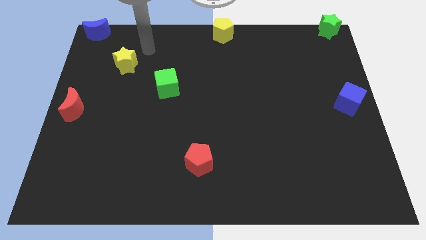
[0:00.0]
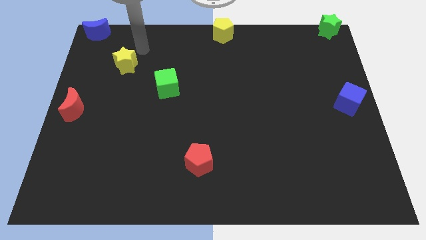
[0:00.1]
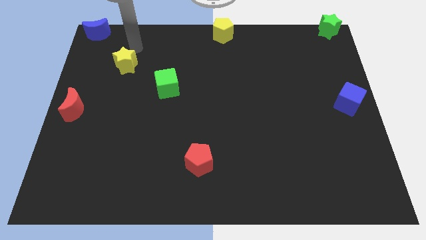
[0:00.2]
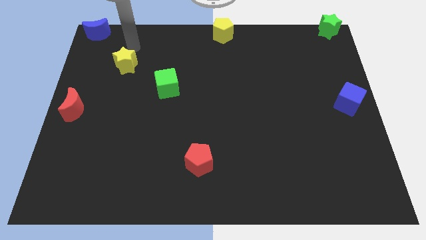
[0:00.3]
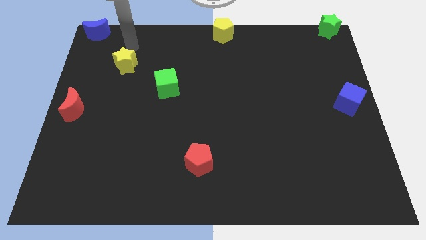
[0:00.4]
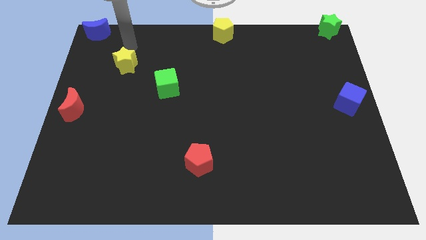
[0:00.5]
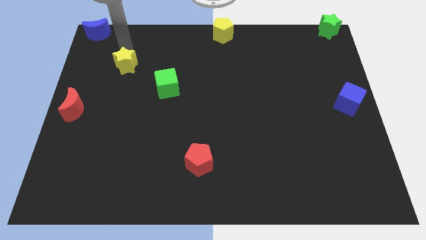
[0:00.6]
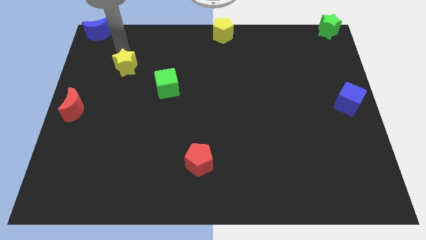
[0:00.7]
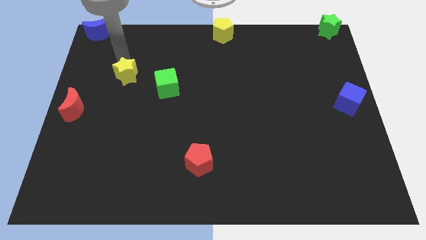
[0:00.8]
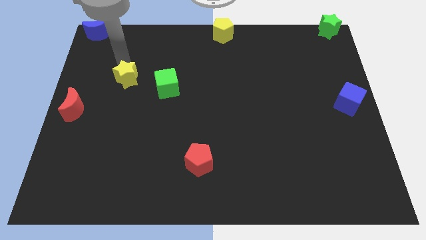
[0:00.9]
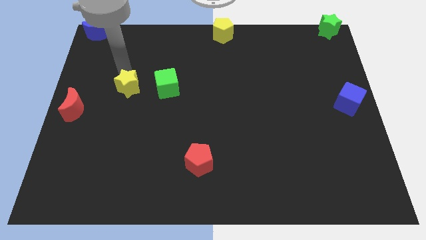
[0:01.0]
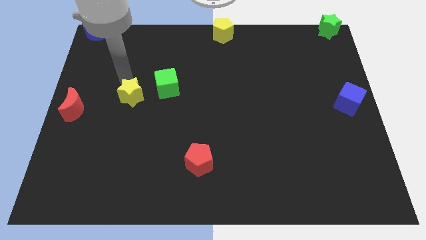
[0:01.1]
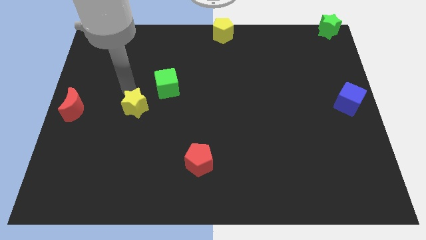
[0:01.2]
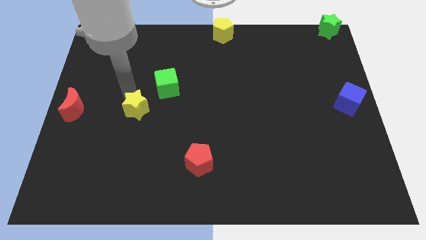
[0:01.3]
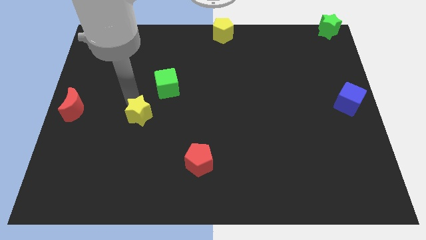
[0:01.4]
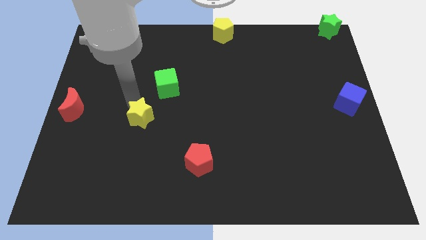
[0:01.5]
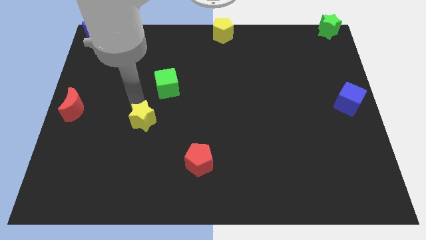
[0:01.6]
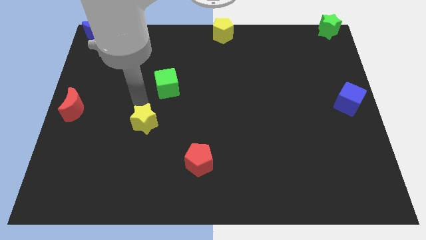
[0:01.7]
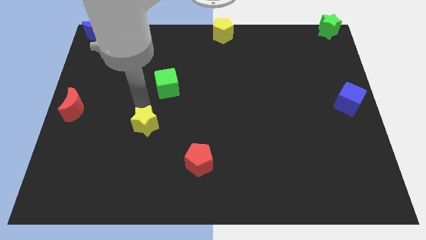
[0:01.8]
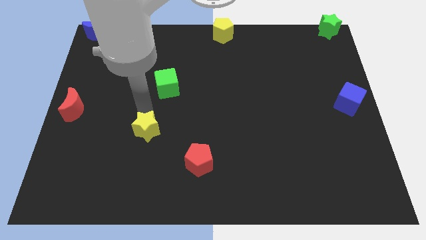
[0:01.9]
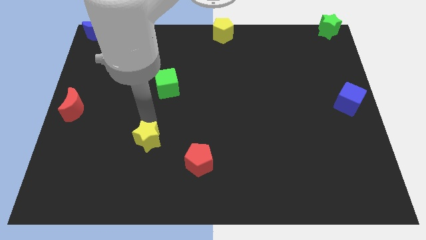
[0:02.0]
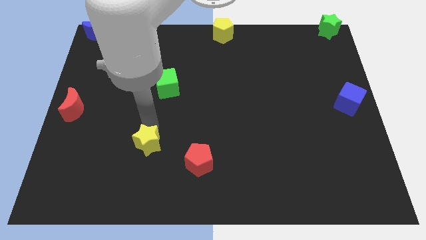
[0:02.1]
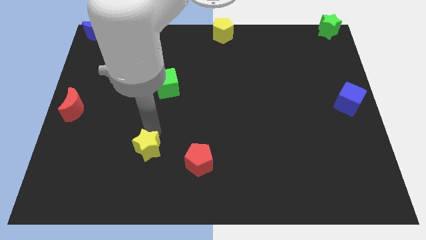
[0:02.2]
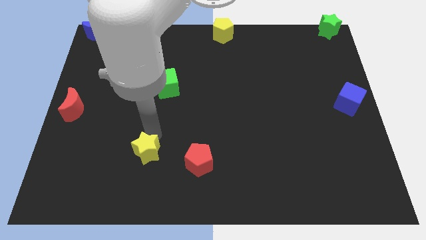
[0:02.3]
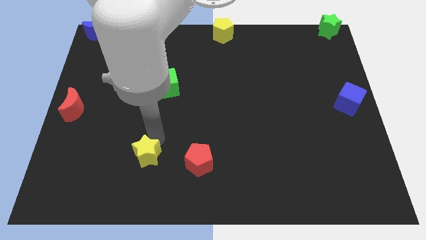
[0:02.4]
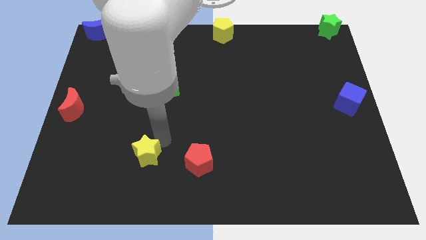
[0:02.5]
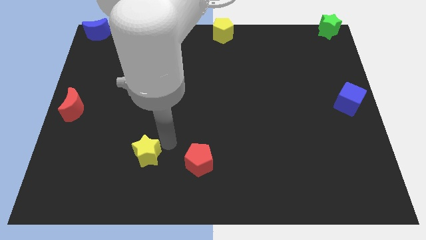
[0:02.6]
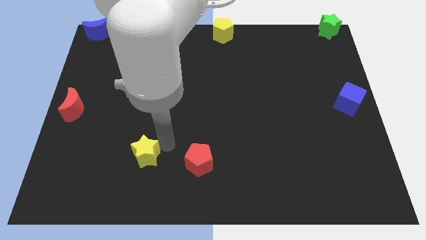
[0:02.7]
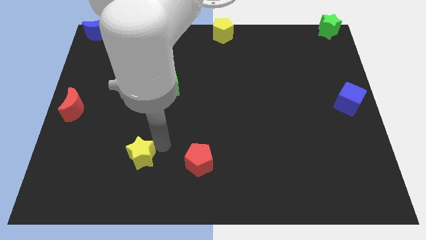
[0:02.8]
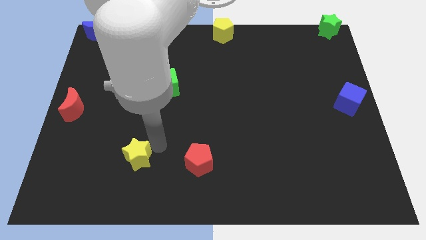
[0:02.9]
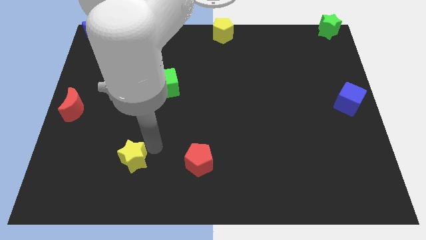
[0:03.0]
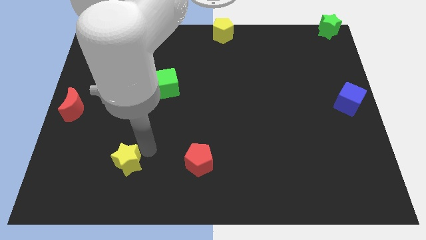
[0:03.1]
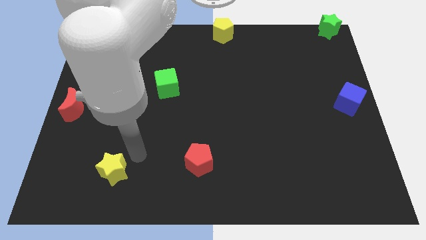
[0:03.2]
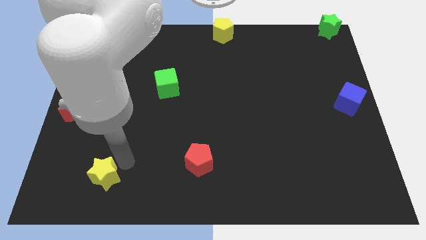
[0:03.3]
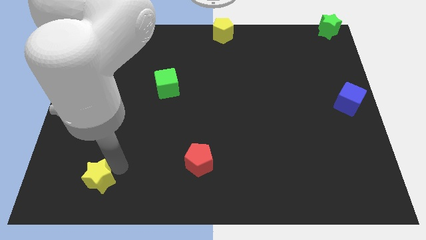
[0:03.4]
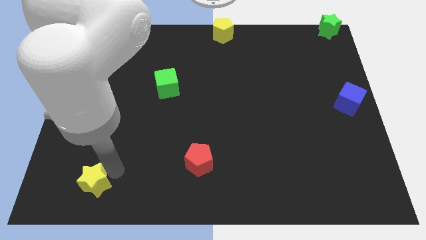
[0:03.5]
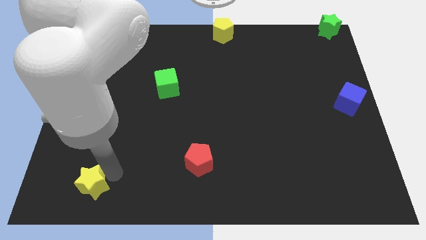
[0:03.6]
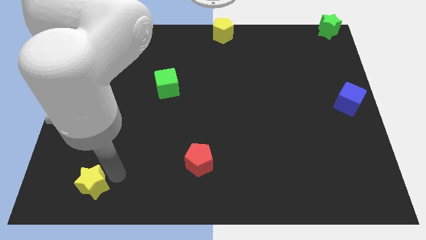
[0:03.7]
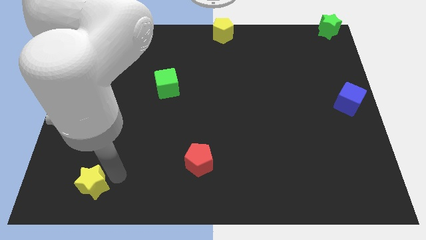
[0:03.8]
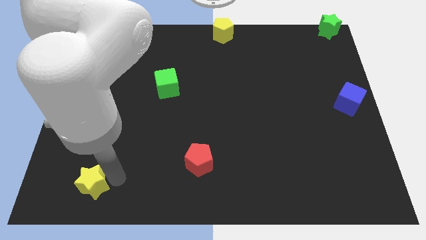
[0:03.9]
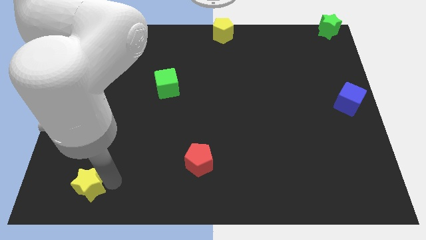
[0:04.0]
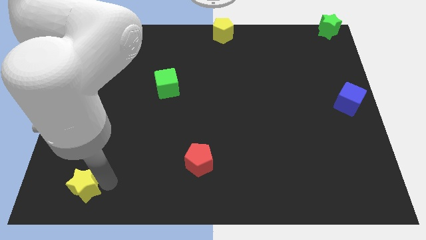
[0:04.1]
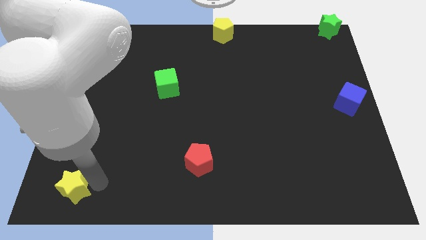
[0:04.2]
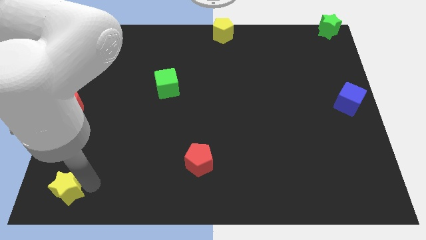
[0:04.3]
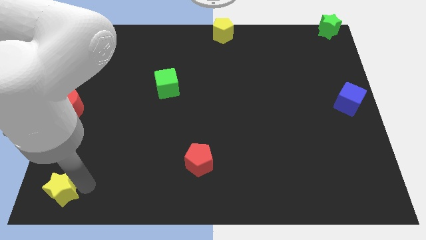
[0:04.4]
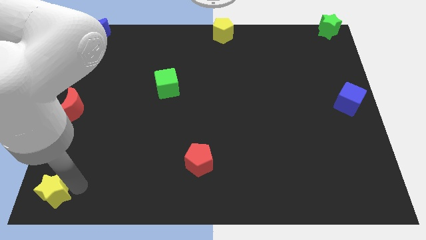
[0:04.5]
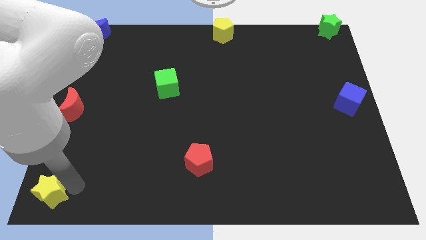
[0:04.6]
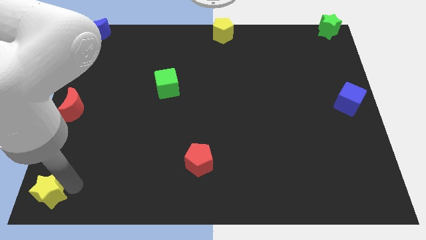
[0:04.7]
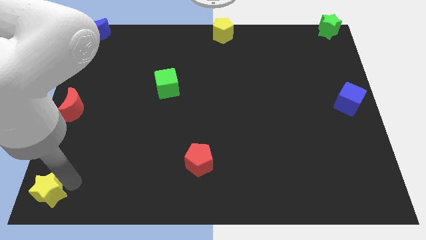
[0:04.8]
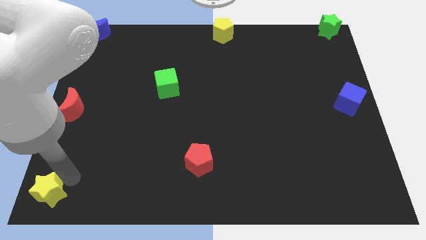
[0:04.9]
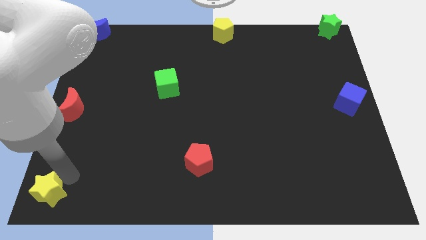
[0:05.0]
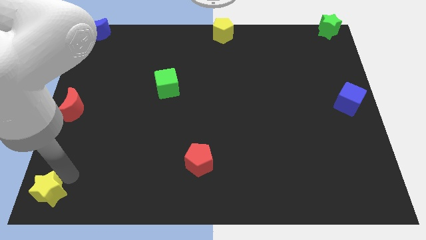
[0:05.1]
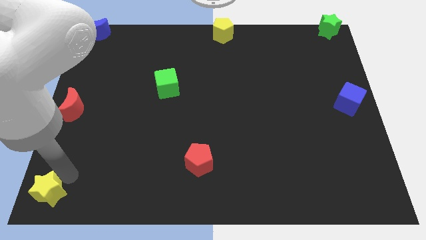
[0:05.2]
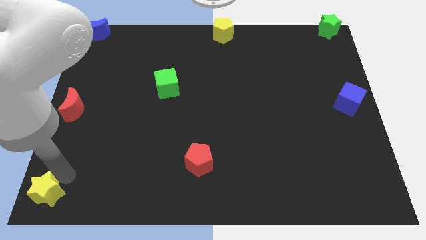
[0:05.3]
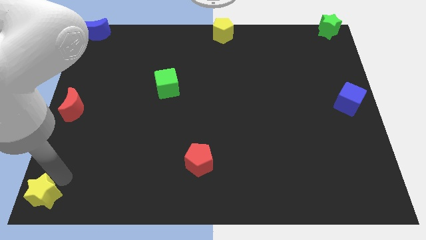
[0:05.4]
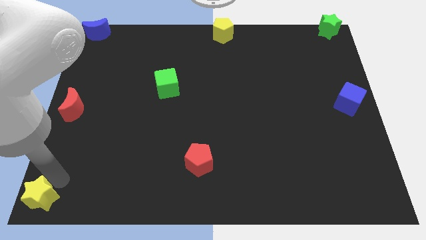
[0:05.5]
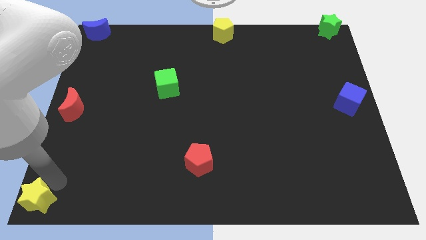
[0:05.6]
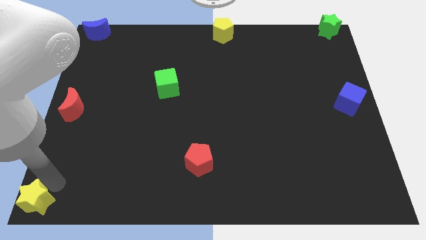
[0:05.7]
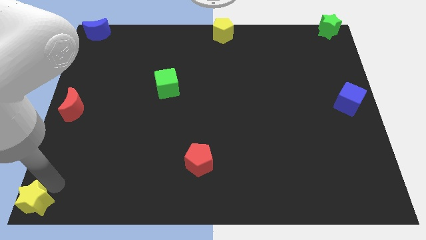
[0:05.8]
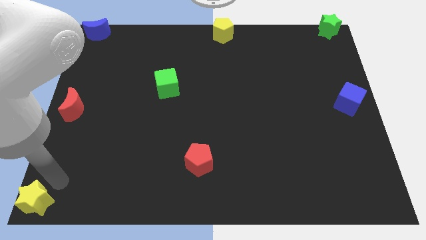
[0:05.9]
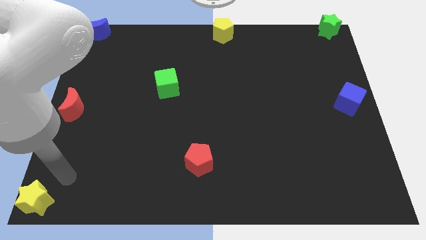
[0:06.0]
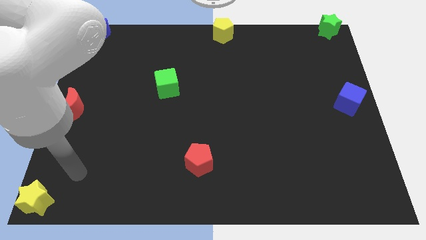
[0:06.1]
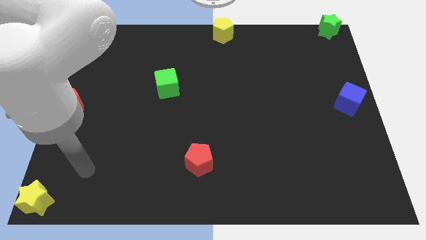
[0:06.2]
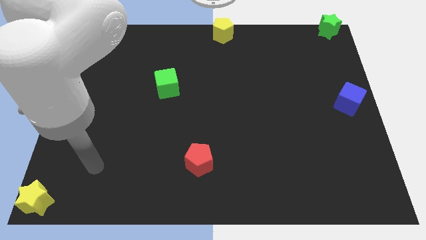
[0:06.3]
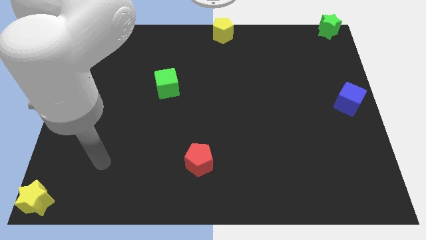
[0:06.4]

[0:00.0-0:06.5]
move the yellow star towards the bottom left

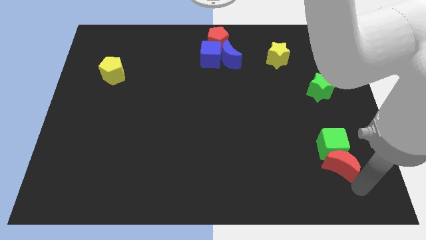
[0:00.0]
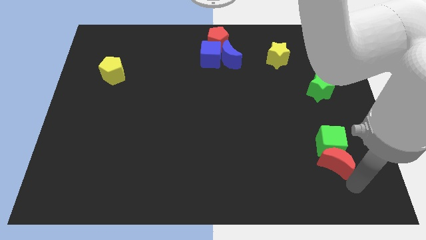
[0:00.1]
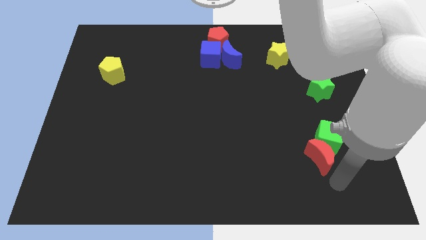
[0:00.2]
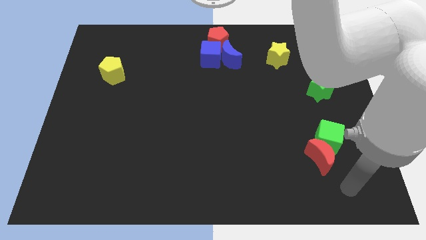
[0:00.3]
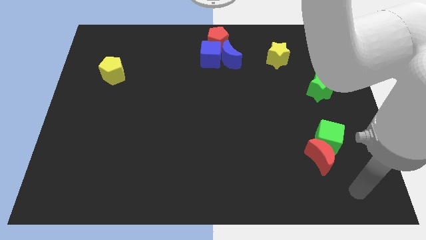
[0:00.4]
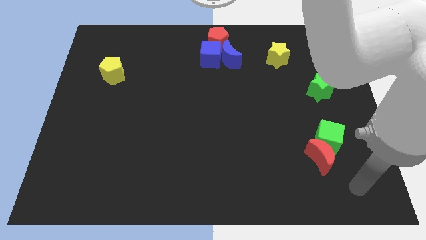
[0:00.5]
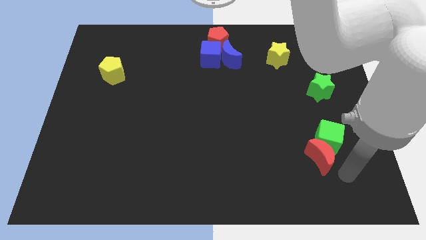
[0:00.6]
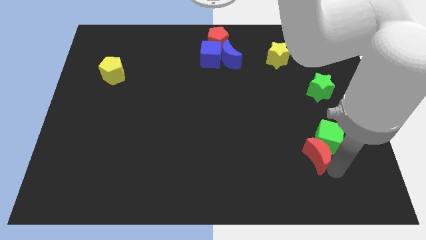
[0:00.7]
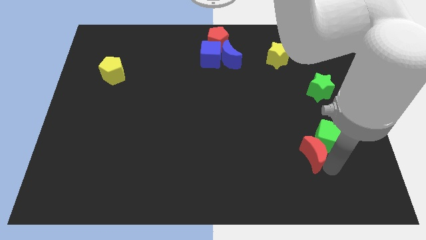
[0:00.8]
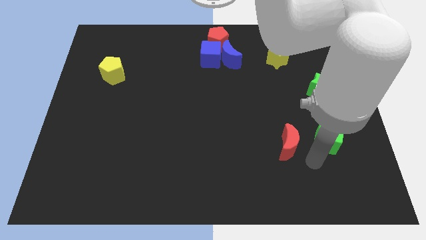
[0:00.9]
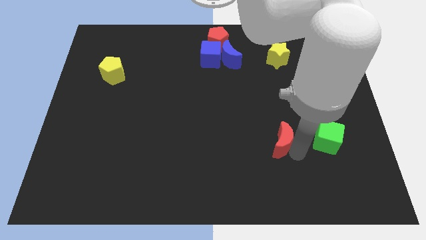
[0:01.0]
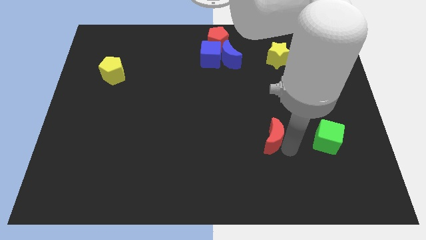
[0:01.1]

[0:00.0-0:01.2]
separate the red crescent from the green cube

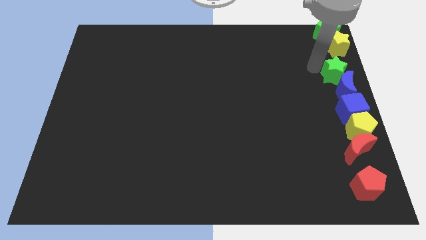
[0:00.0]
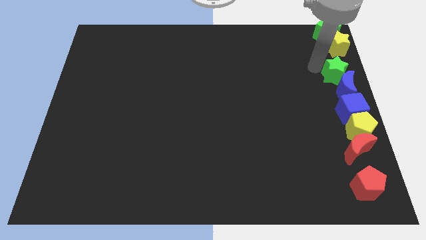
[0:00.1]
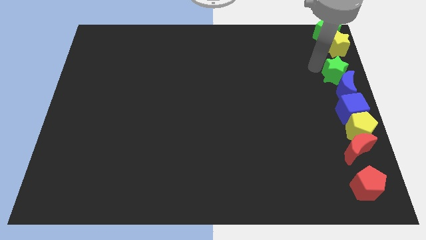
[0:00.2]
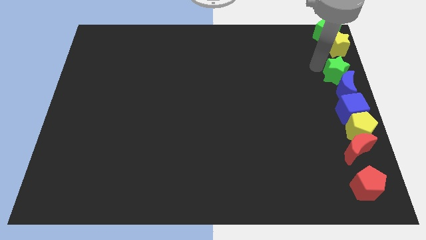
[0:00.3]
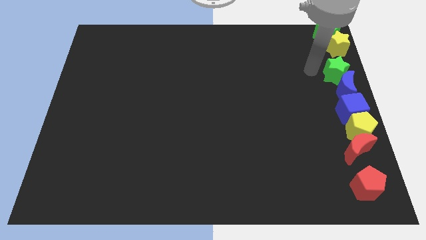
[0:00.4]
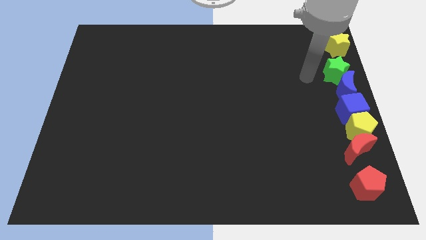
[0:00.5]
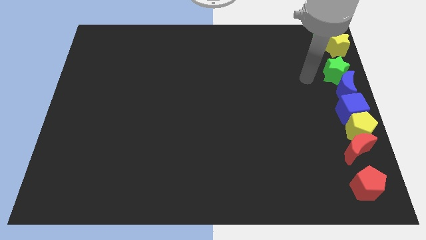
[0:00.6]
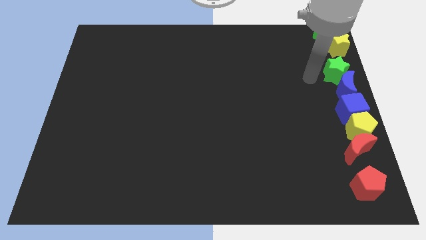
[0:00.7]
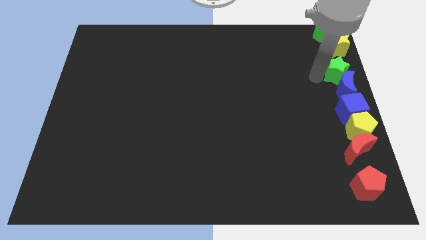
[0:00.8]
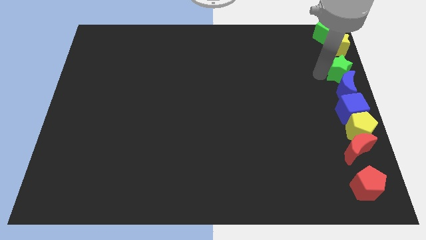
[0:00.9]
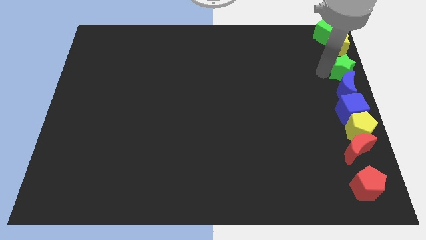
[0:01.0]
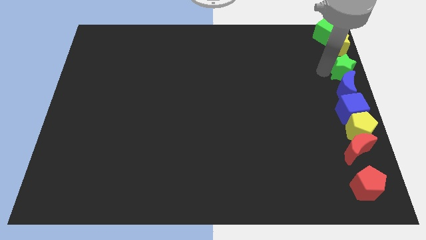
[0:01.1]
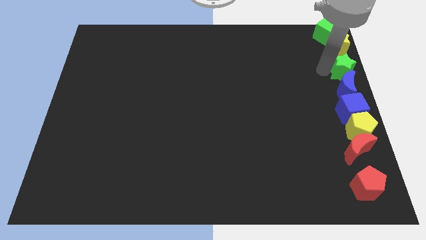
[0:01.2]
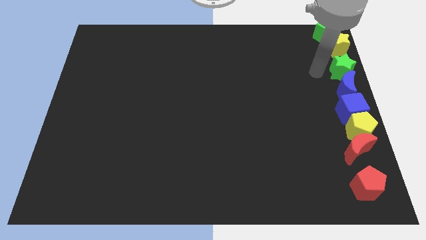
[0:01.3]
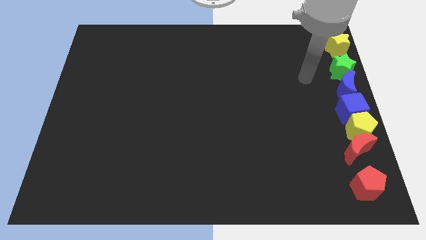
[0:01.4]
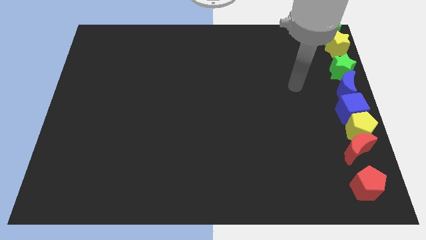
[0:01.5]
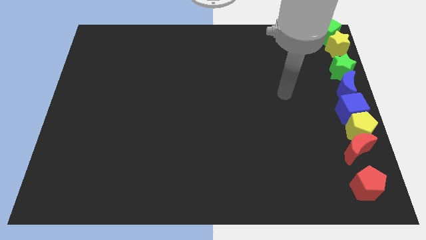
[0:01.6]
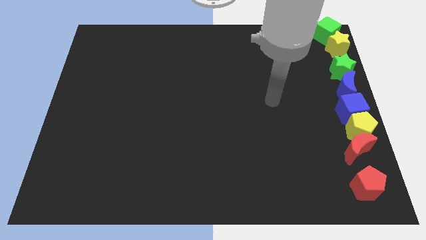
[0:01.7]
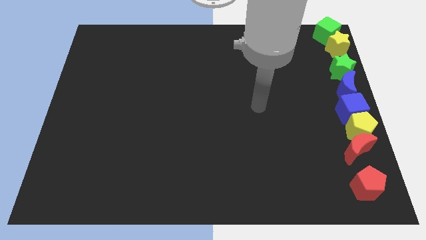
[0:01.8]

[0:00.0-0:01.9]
place green star in between yellow star and blue moon
